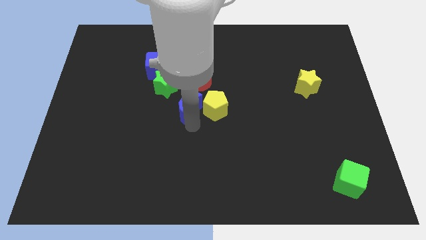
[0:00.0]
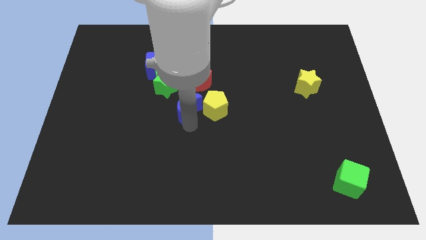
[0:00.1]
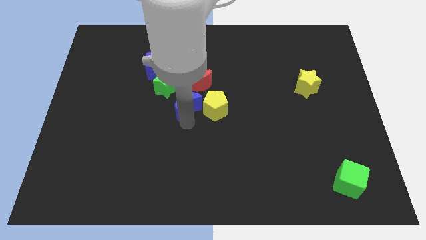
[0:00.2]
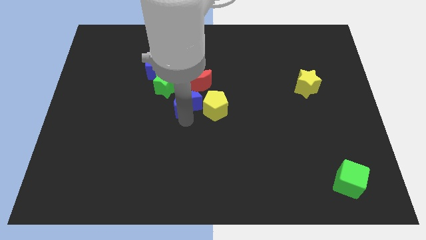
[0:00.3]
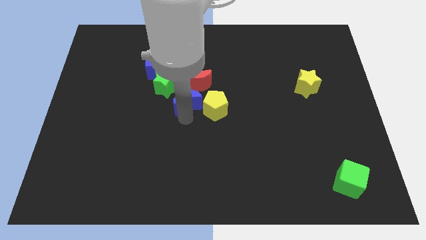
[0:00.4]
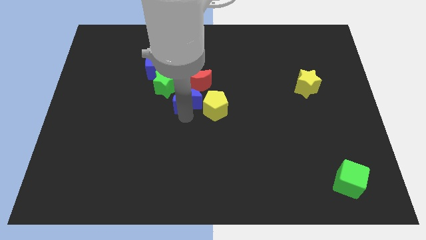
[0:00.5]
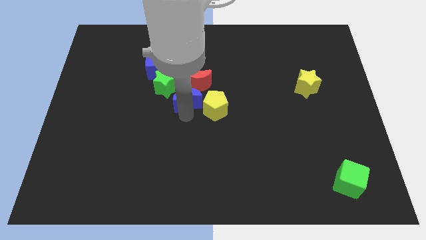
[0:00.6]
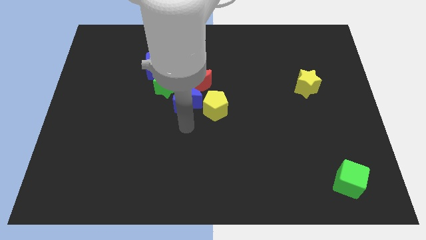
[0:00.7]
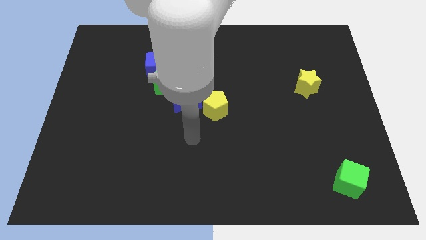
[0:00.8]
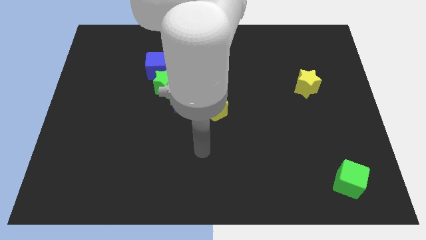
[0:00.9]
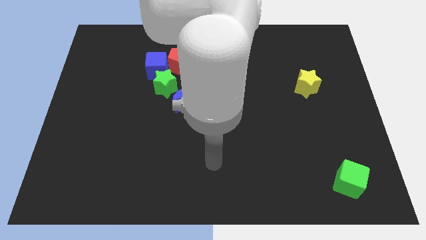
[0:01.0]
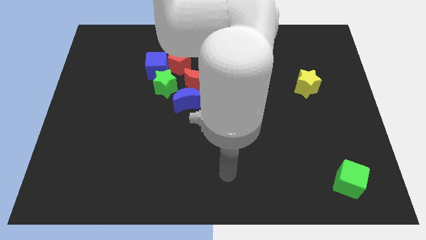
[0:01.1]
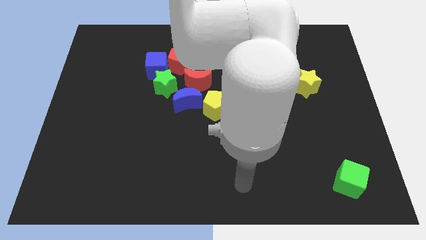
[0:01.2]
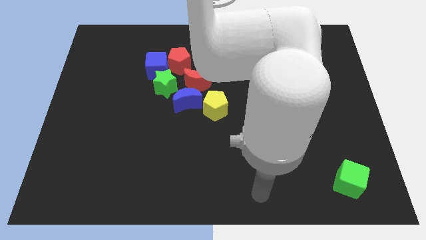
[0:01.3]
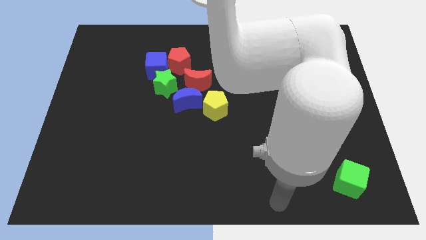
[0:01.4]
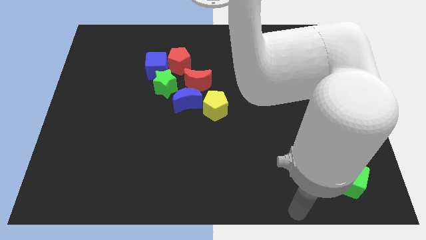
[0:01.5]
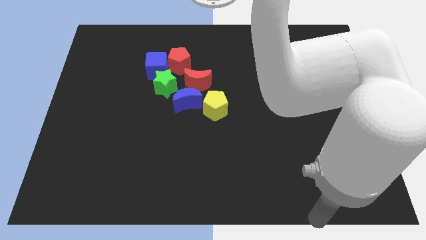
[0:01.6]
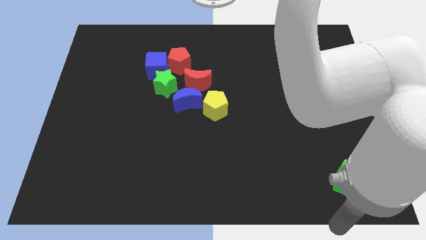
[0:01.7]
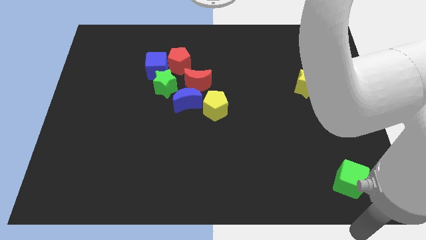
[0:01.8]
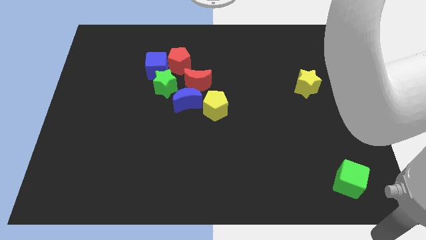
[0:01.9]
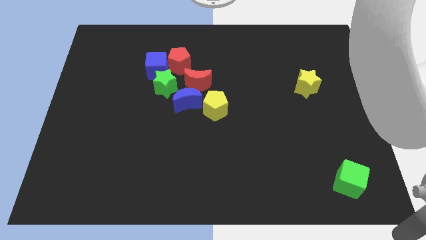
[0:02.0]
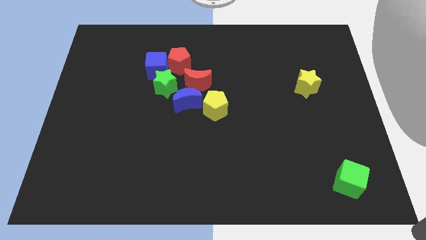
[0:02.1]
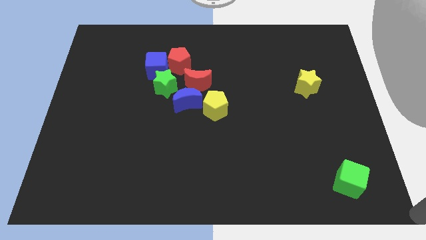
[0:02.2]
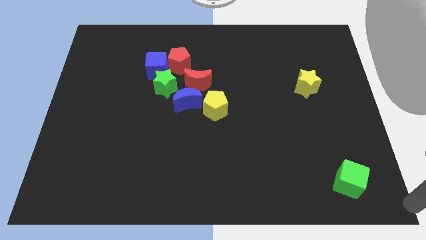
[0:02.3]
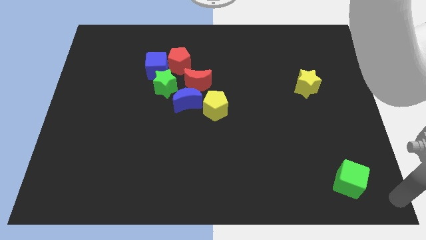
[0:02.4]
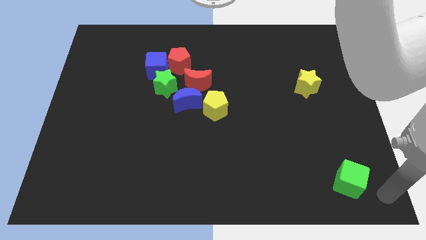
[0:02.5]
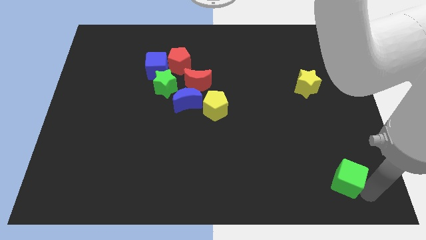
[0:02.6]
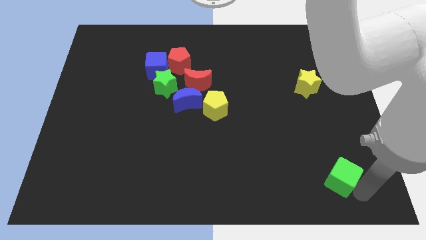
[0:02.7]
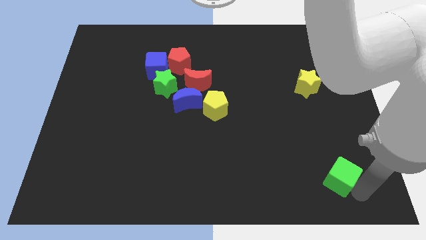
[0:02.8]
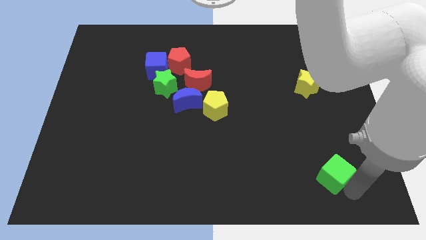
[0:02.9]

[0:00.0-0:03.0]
go near the green cube

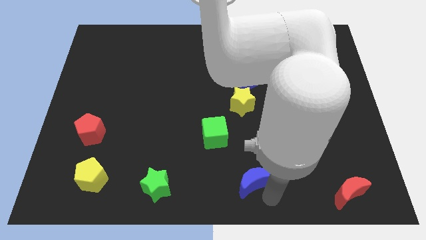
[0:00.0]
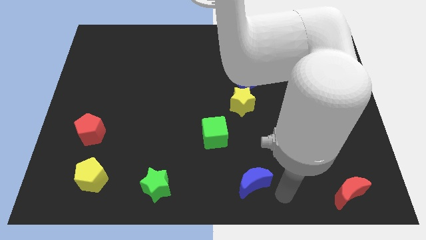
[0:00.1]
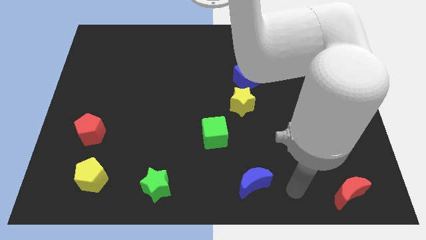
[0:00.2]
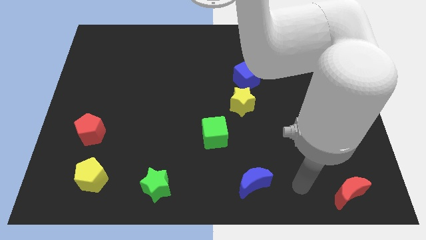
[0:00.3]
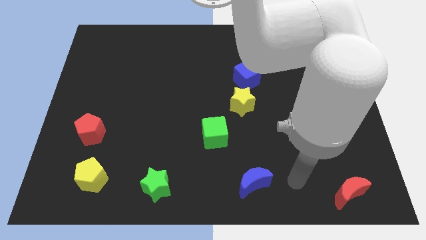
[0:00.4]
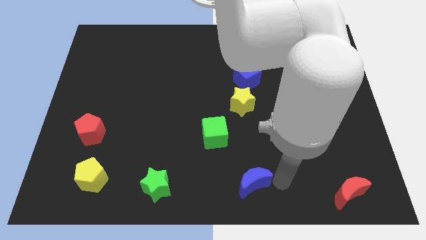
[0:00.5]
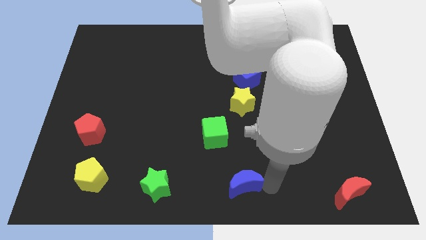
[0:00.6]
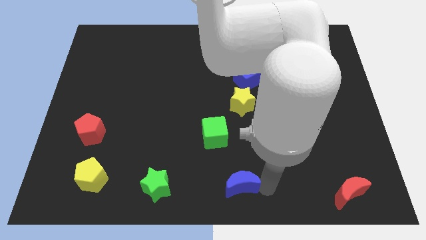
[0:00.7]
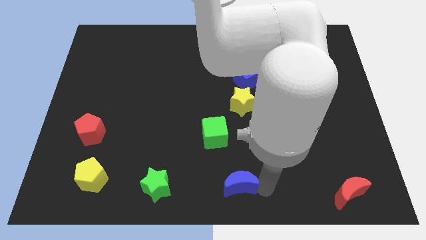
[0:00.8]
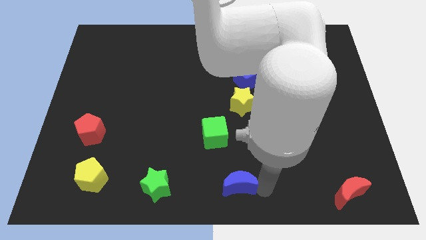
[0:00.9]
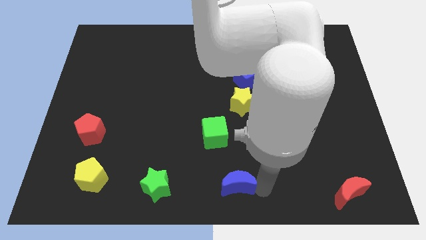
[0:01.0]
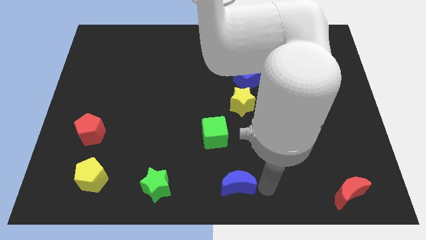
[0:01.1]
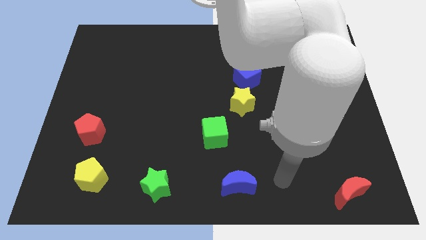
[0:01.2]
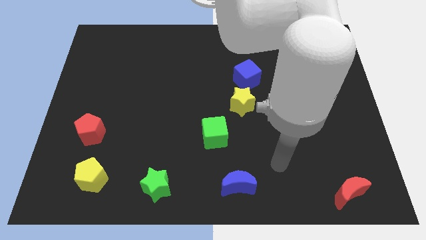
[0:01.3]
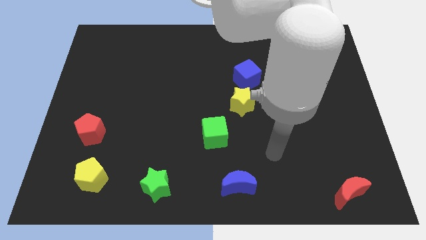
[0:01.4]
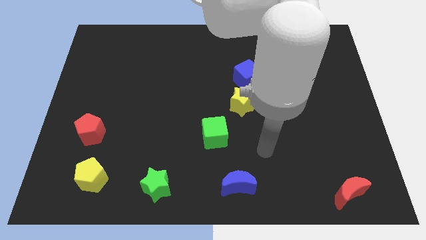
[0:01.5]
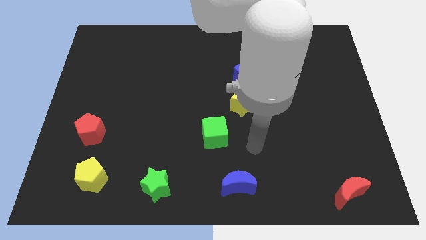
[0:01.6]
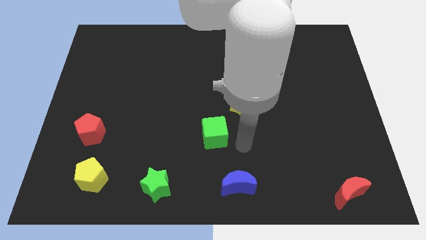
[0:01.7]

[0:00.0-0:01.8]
move arm towards to the green cube

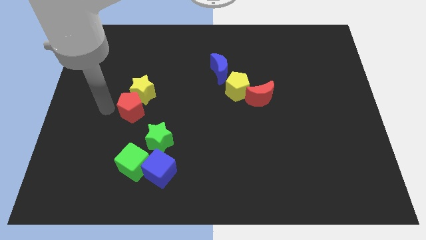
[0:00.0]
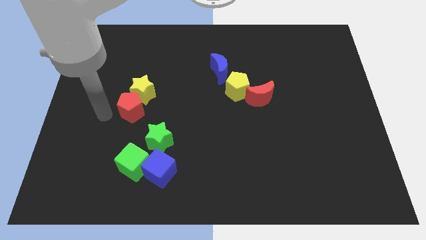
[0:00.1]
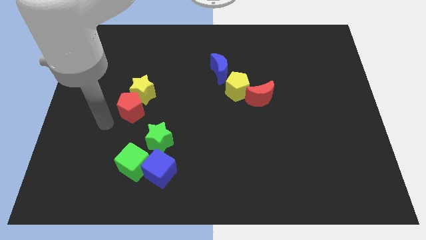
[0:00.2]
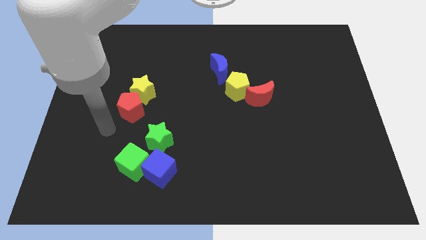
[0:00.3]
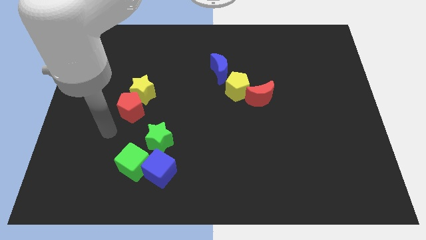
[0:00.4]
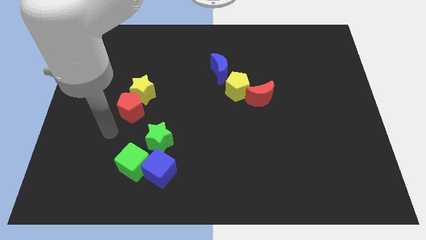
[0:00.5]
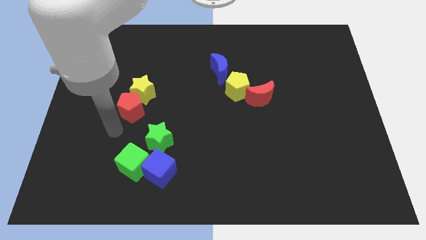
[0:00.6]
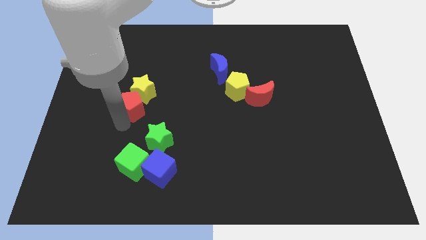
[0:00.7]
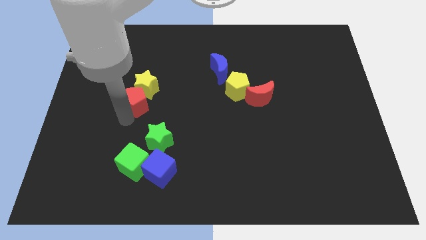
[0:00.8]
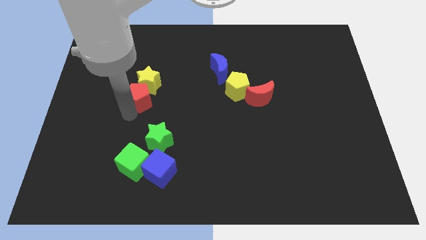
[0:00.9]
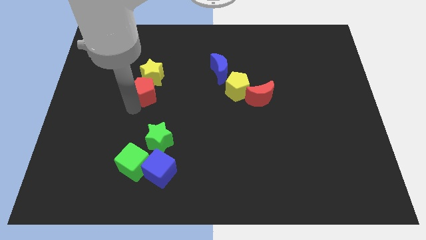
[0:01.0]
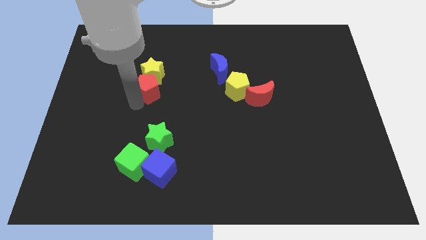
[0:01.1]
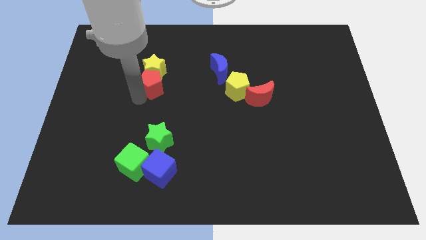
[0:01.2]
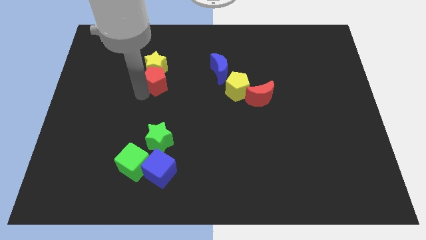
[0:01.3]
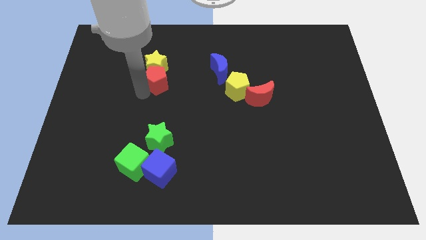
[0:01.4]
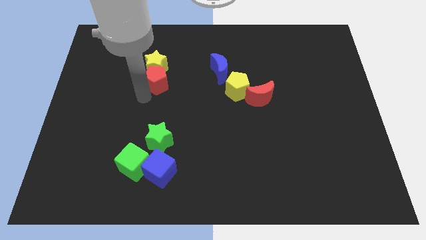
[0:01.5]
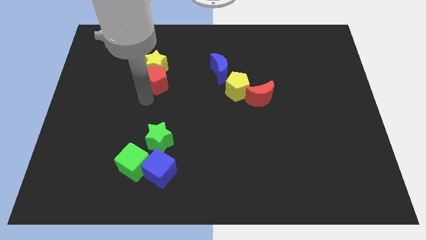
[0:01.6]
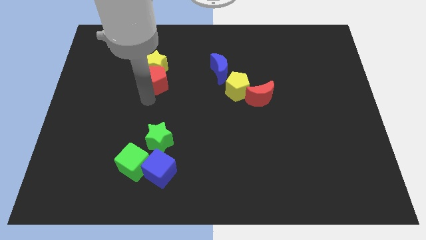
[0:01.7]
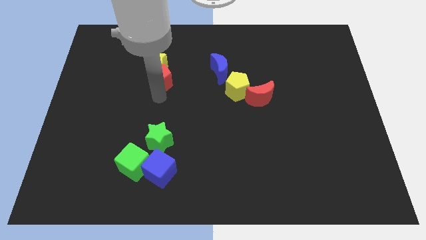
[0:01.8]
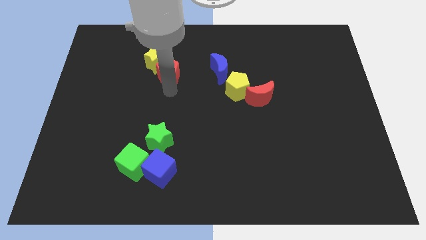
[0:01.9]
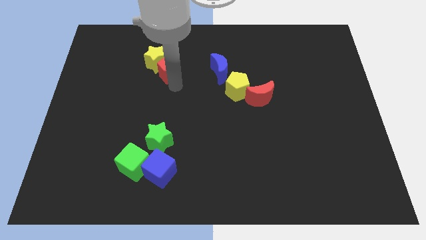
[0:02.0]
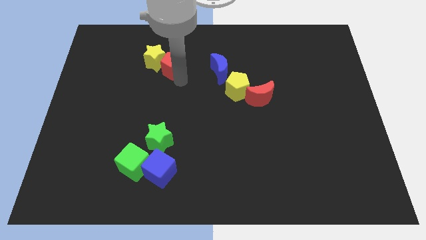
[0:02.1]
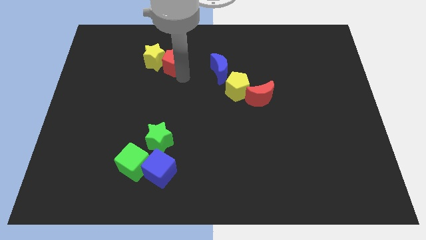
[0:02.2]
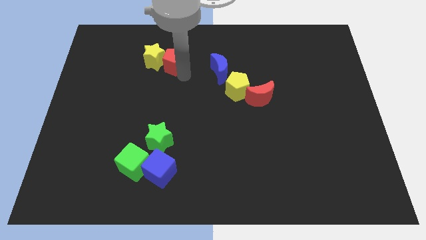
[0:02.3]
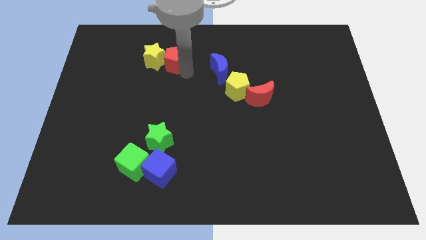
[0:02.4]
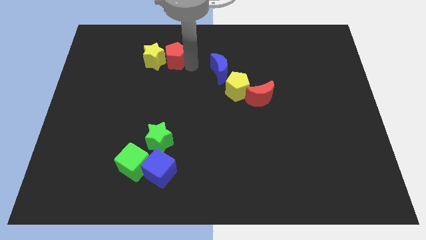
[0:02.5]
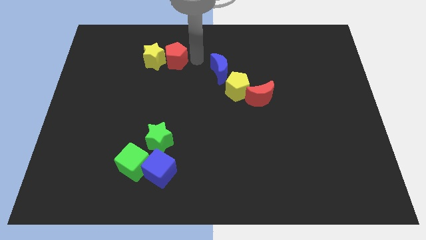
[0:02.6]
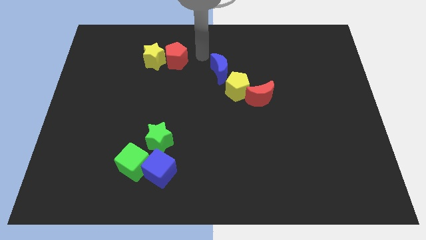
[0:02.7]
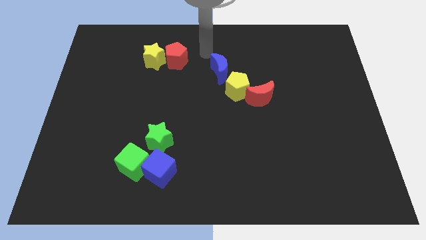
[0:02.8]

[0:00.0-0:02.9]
push red pentagon beside yellow star

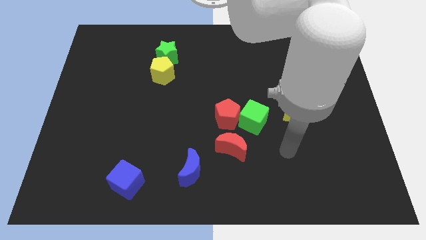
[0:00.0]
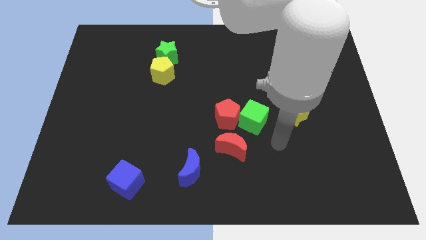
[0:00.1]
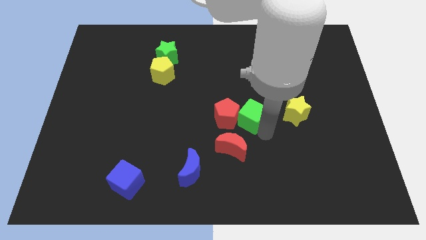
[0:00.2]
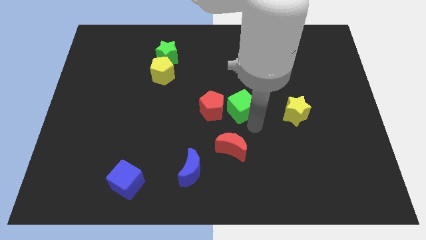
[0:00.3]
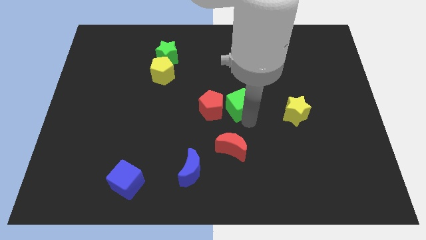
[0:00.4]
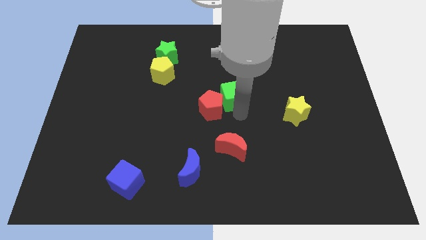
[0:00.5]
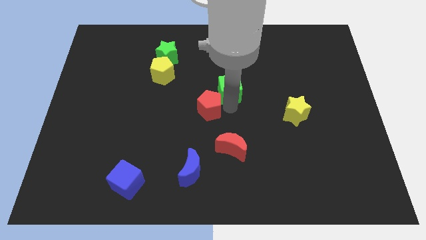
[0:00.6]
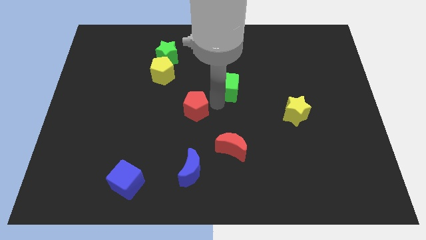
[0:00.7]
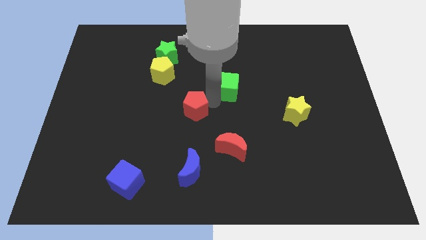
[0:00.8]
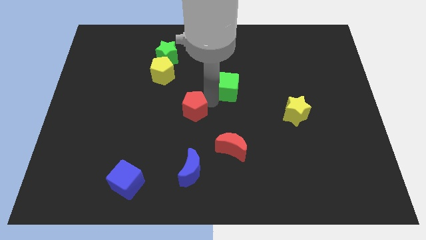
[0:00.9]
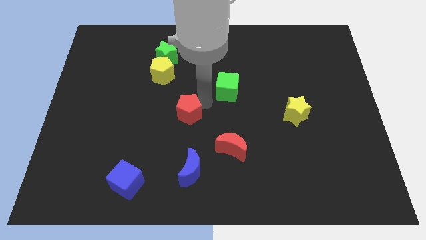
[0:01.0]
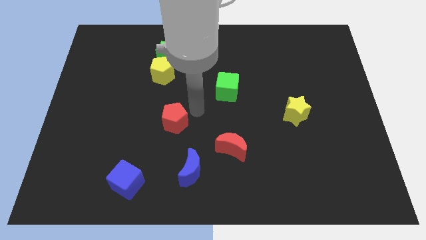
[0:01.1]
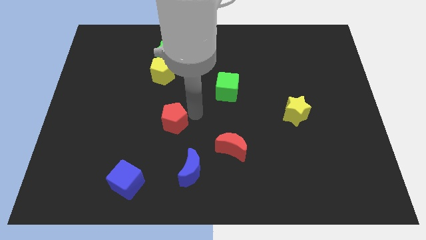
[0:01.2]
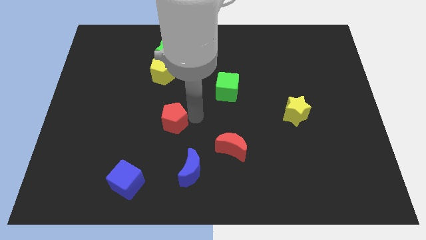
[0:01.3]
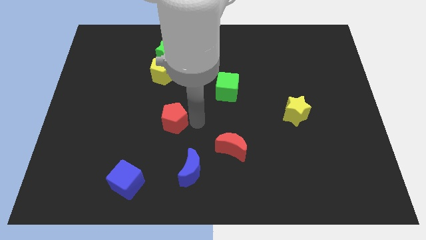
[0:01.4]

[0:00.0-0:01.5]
separate the green cube and the red pentagon
